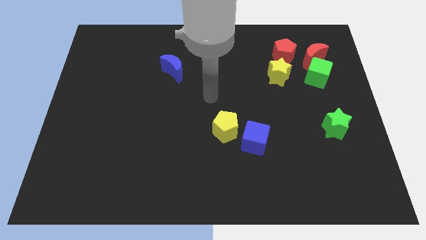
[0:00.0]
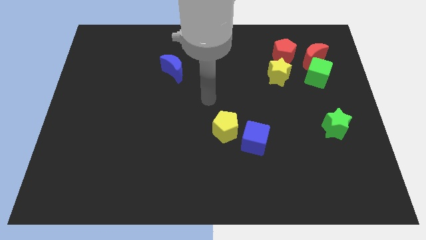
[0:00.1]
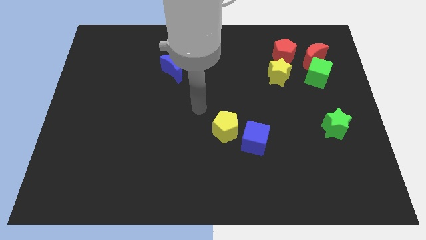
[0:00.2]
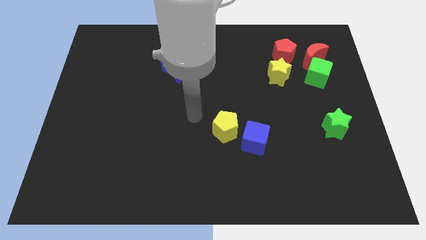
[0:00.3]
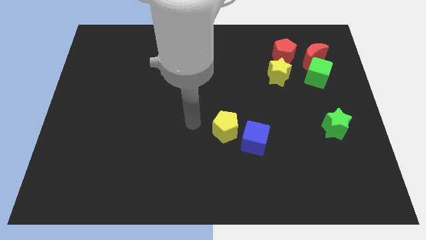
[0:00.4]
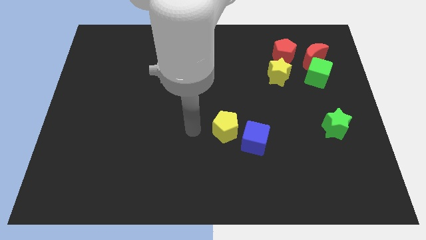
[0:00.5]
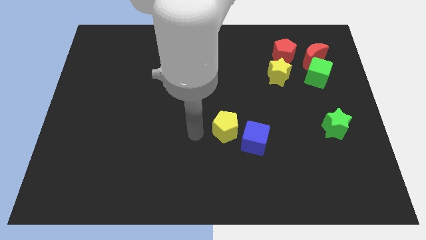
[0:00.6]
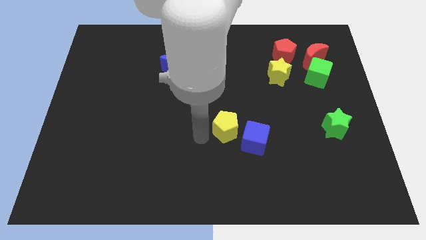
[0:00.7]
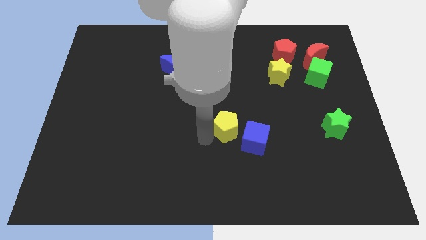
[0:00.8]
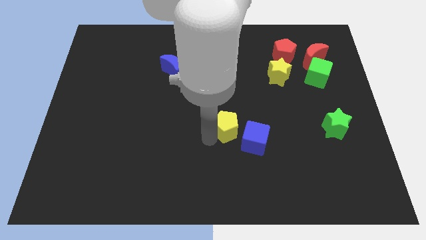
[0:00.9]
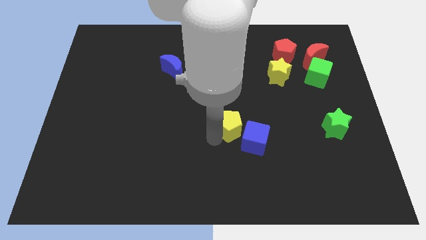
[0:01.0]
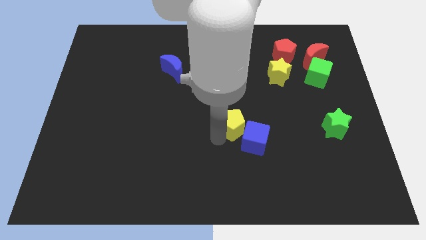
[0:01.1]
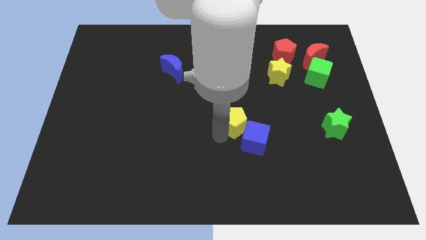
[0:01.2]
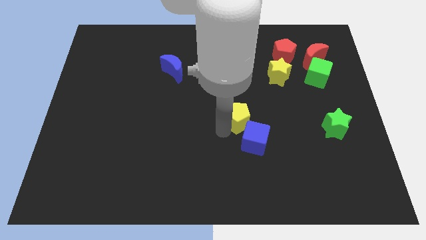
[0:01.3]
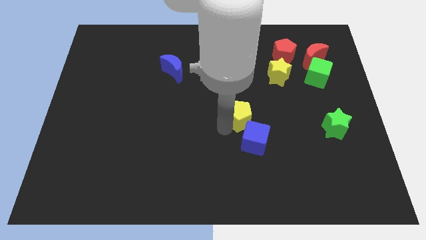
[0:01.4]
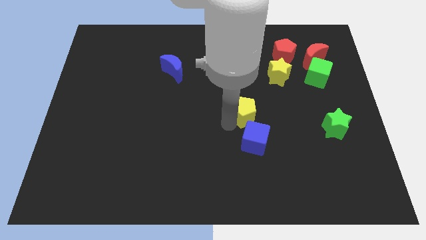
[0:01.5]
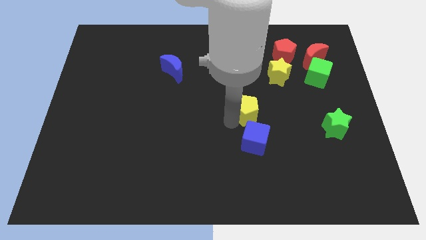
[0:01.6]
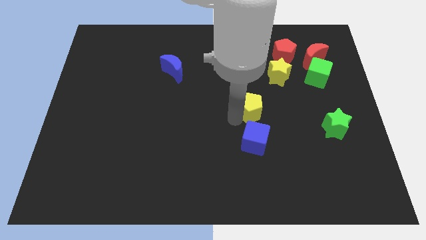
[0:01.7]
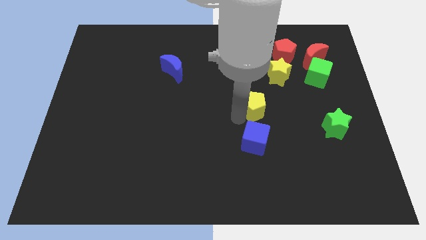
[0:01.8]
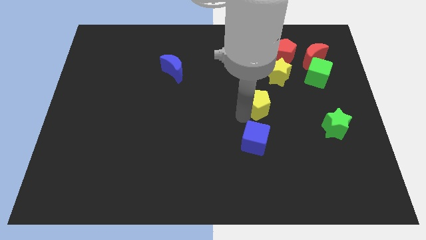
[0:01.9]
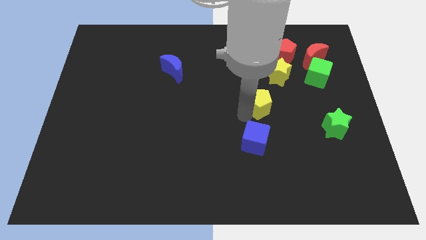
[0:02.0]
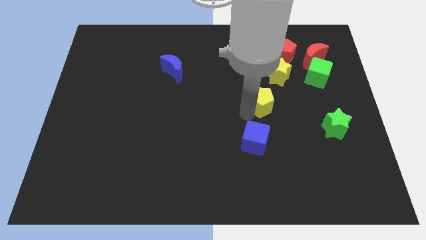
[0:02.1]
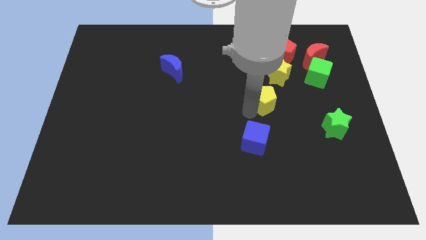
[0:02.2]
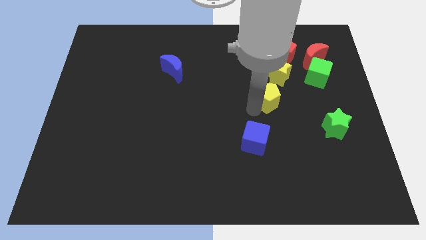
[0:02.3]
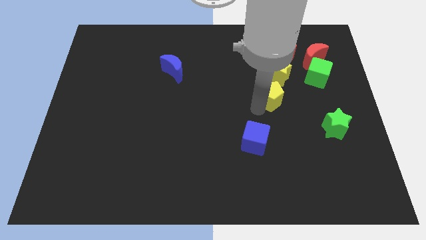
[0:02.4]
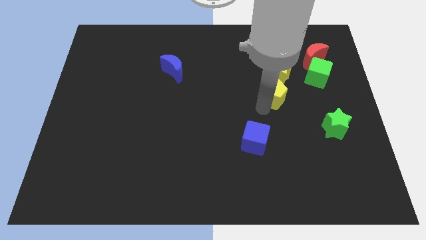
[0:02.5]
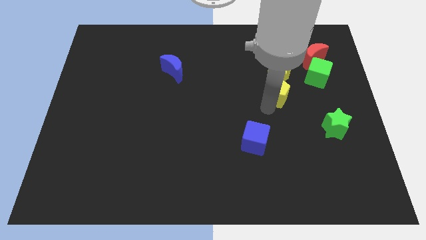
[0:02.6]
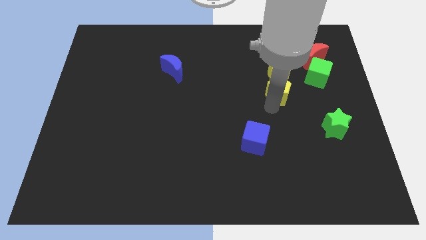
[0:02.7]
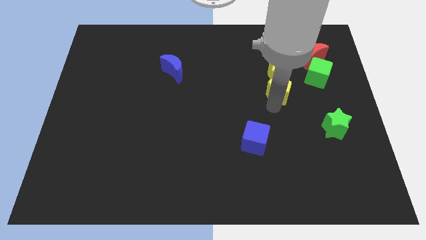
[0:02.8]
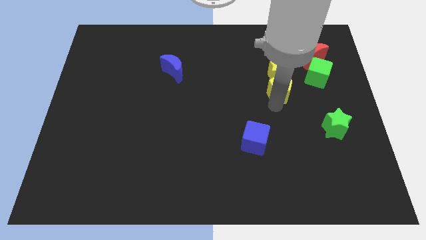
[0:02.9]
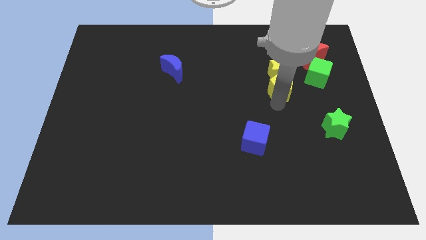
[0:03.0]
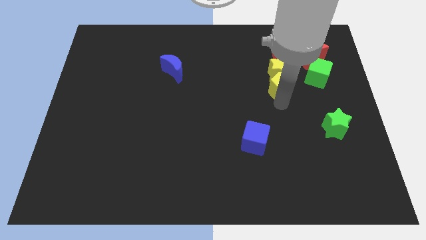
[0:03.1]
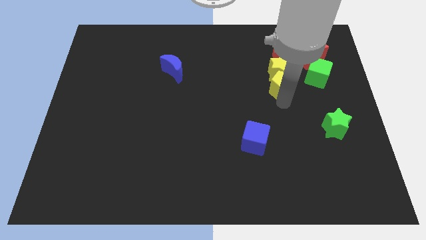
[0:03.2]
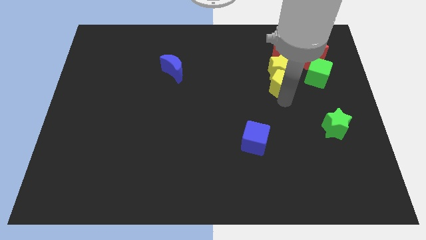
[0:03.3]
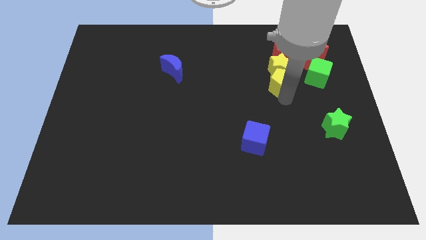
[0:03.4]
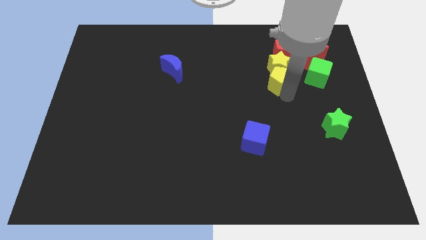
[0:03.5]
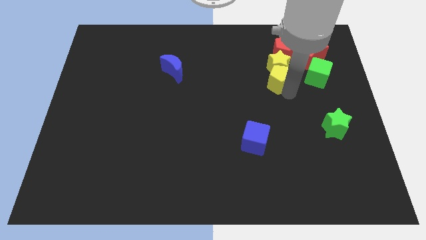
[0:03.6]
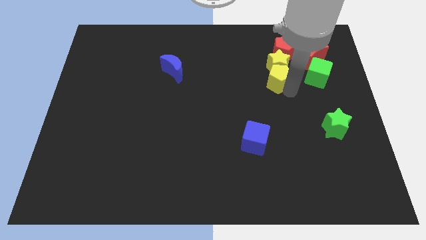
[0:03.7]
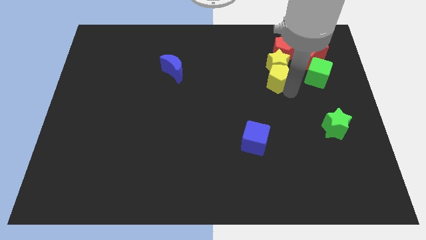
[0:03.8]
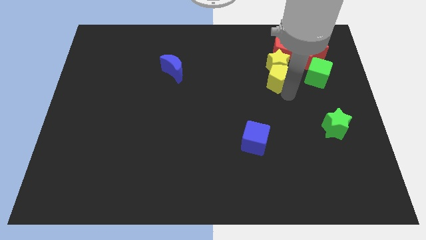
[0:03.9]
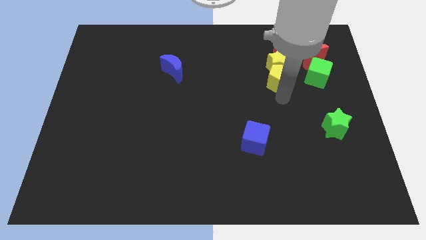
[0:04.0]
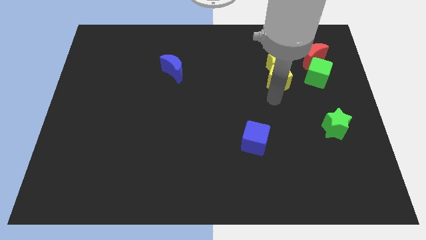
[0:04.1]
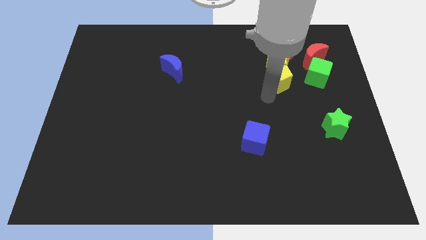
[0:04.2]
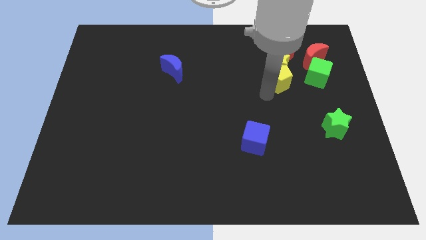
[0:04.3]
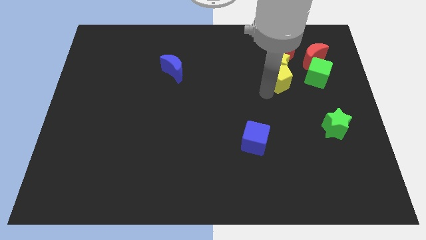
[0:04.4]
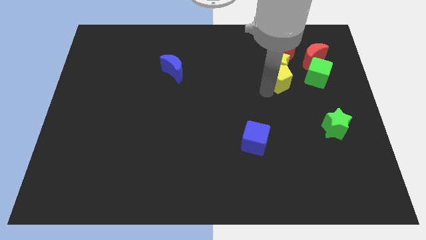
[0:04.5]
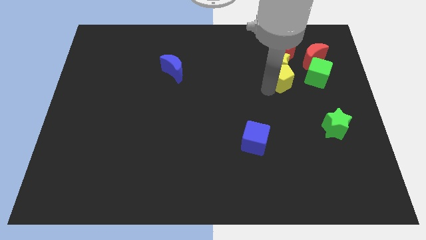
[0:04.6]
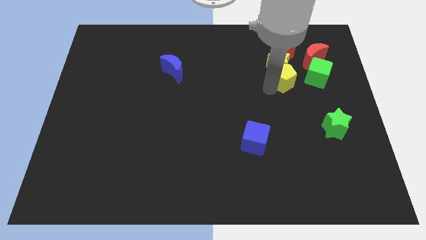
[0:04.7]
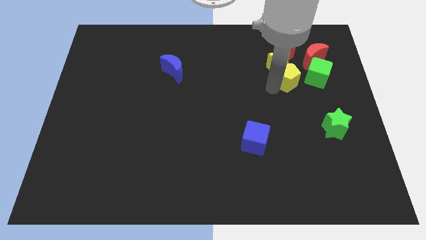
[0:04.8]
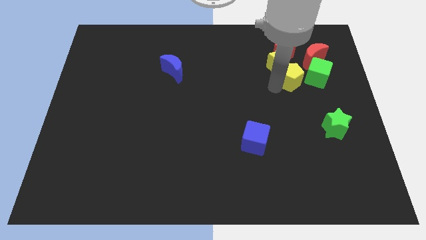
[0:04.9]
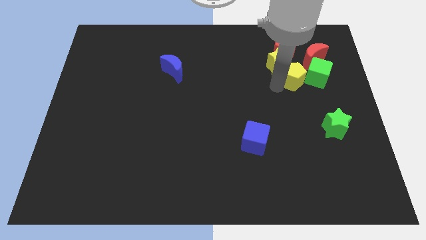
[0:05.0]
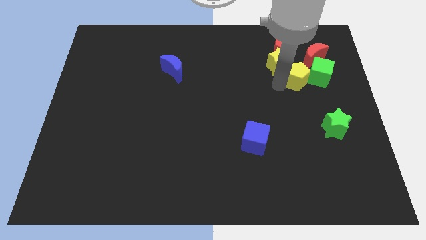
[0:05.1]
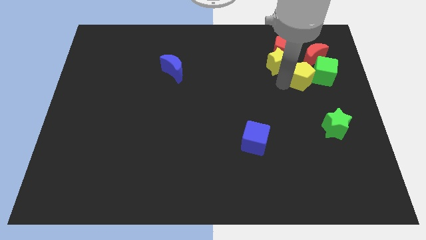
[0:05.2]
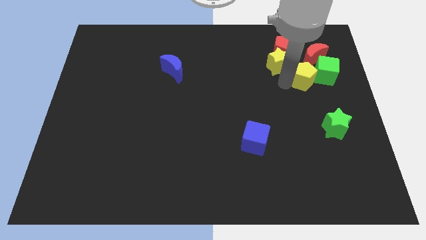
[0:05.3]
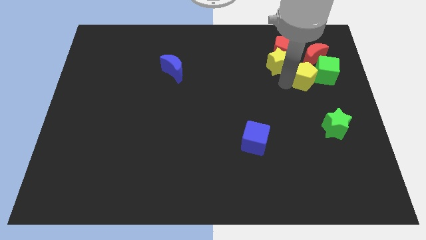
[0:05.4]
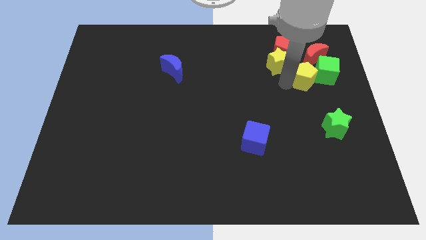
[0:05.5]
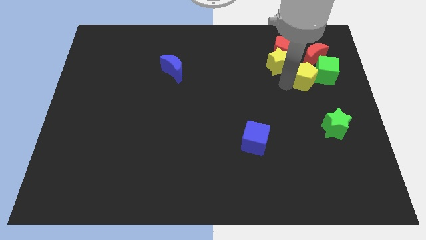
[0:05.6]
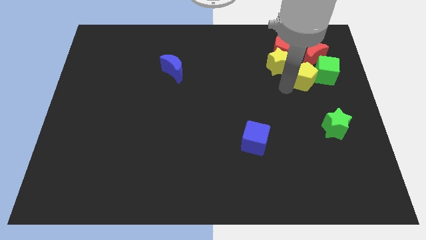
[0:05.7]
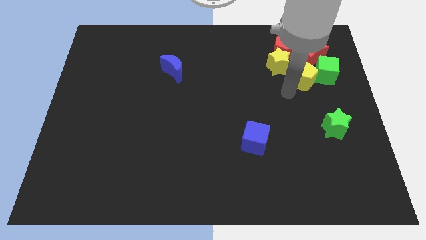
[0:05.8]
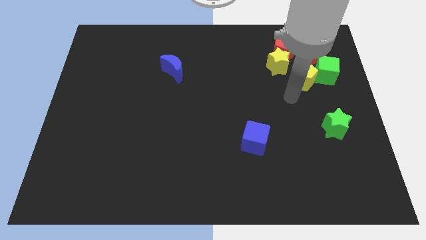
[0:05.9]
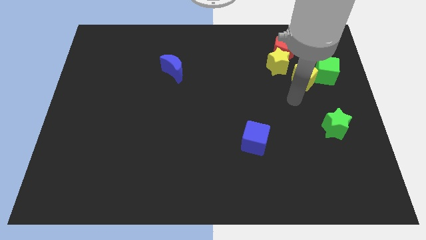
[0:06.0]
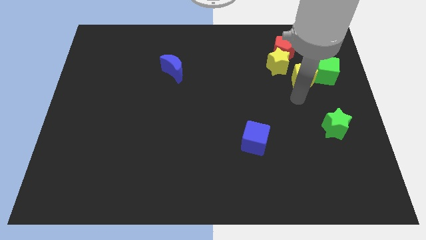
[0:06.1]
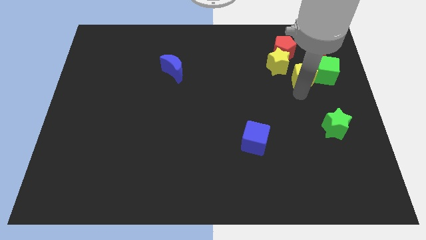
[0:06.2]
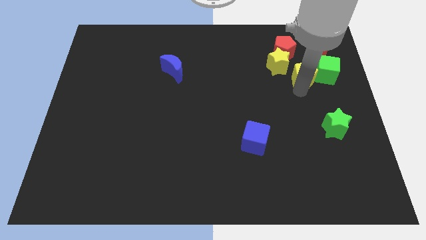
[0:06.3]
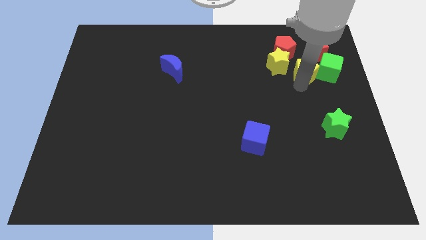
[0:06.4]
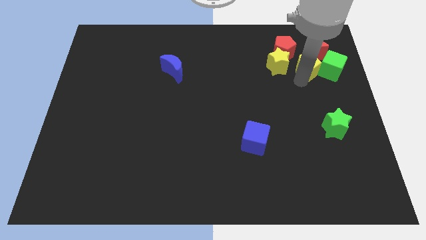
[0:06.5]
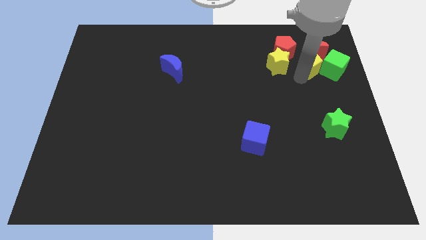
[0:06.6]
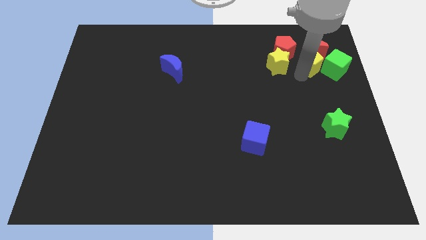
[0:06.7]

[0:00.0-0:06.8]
slide the yellow pentagon close to the red moon

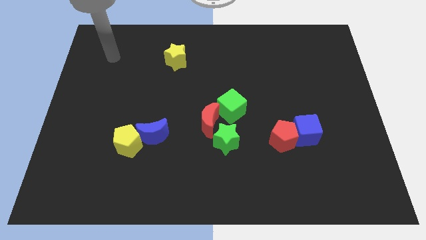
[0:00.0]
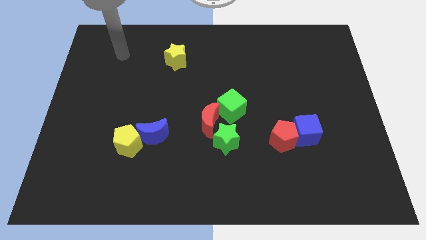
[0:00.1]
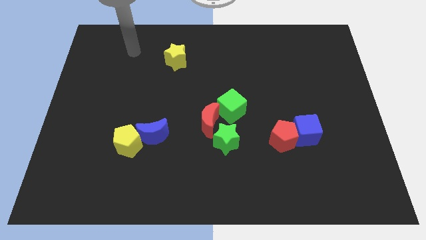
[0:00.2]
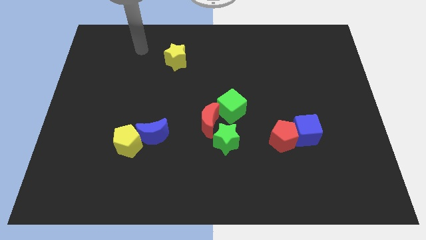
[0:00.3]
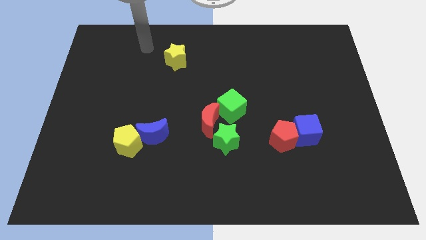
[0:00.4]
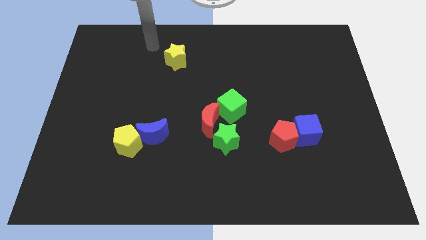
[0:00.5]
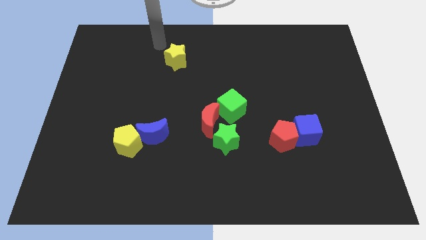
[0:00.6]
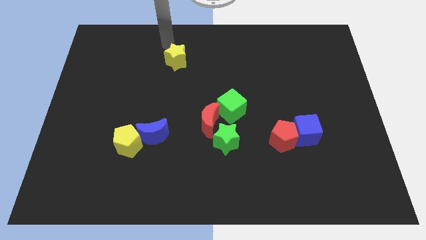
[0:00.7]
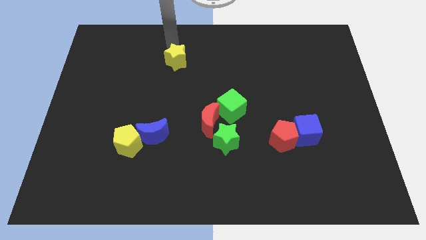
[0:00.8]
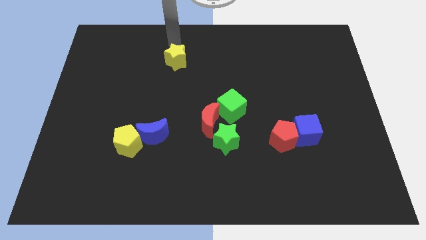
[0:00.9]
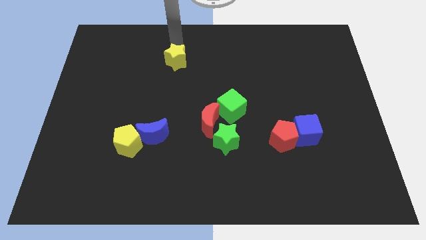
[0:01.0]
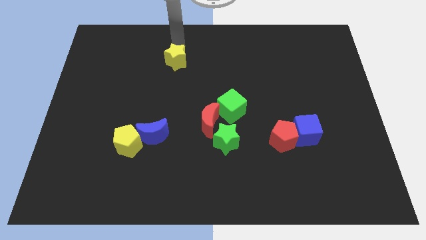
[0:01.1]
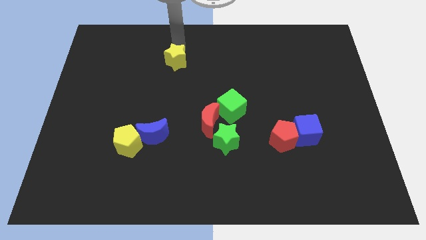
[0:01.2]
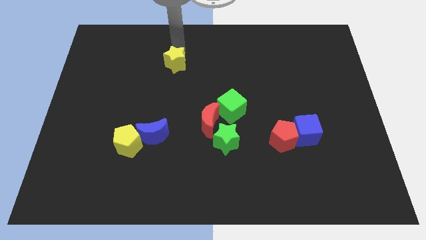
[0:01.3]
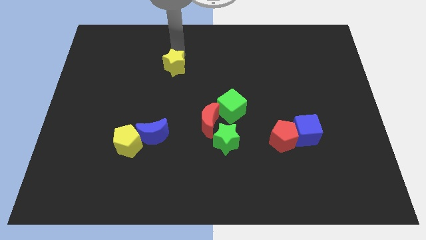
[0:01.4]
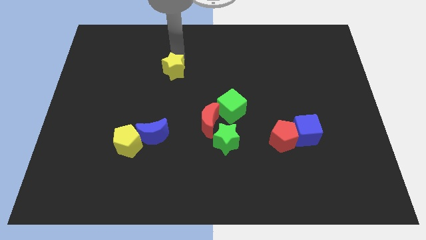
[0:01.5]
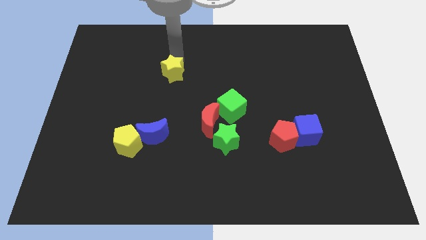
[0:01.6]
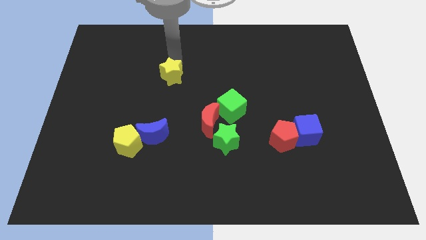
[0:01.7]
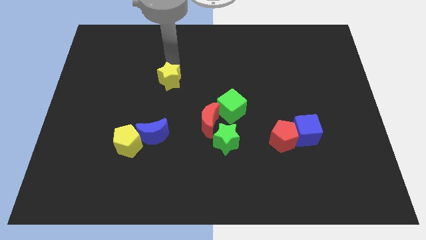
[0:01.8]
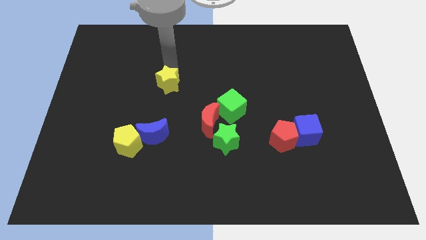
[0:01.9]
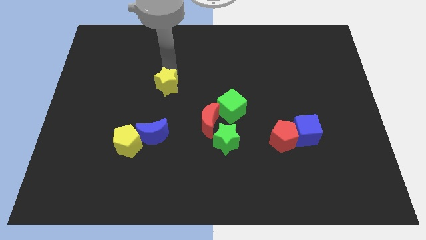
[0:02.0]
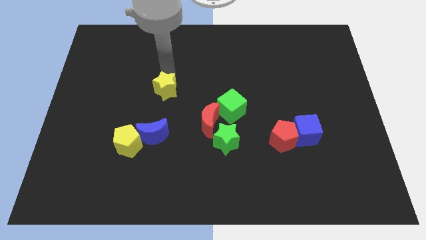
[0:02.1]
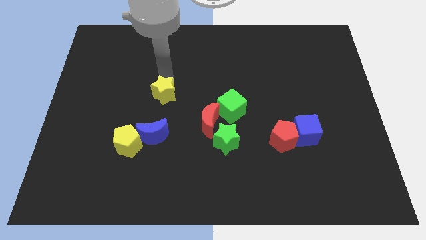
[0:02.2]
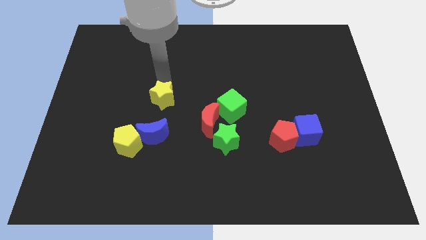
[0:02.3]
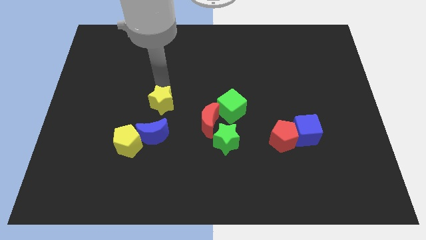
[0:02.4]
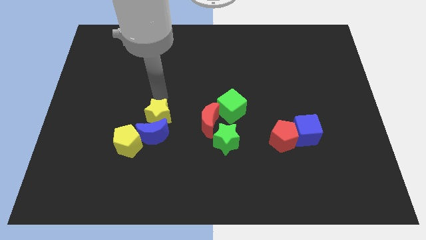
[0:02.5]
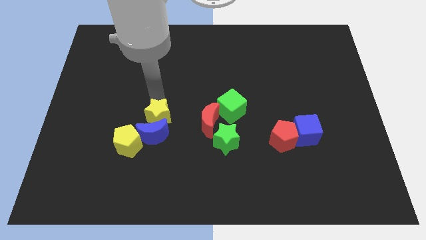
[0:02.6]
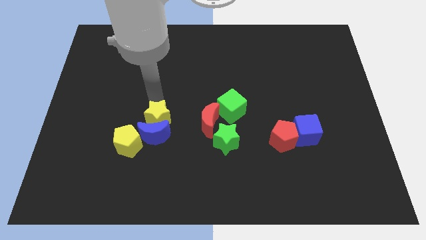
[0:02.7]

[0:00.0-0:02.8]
slide the yellow star to the blue moon
